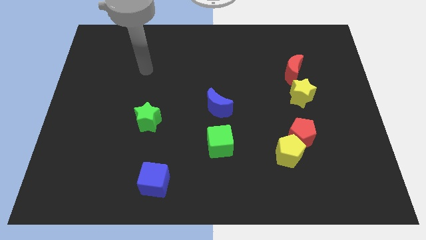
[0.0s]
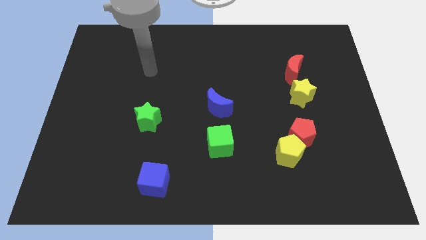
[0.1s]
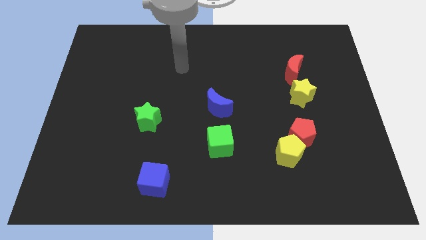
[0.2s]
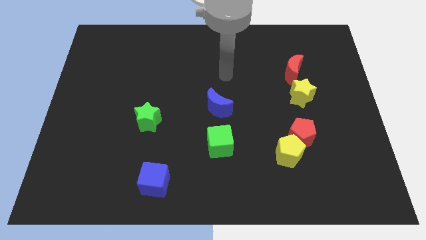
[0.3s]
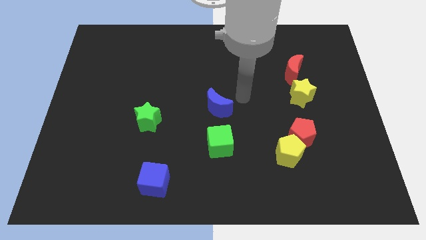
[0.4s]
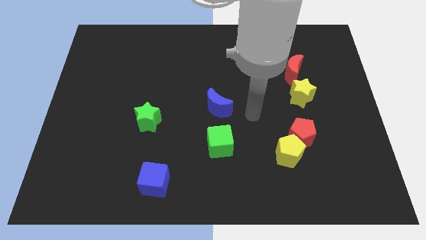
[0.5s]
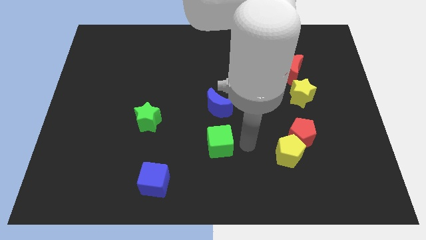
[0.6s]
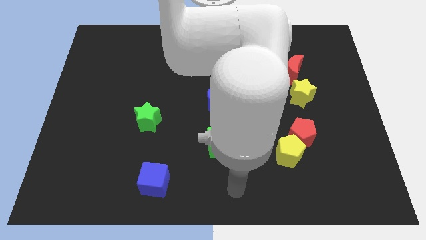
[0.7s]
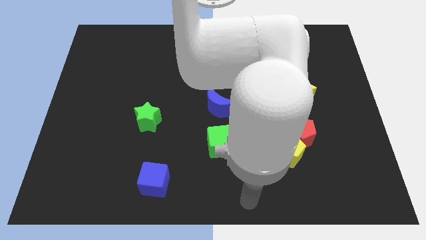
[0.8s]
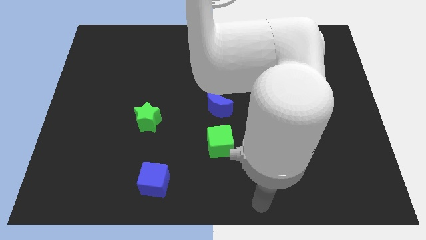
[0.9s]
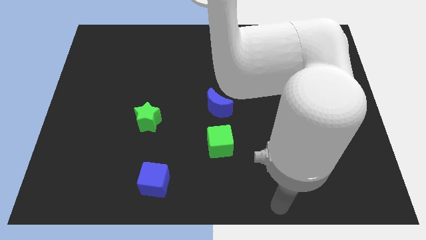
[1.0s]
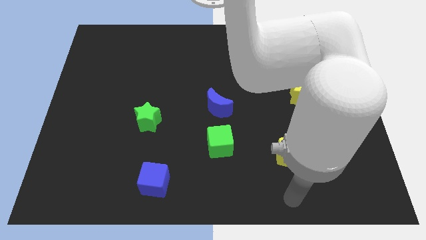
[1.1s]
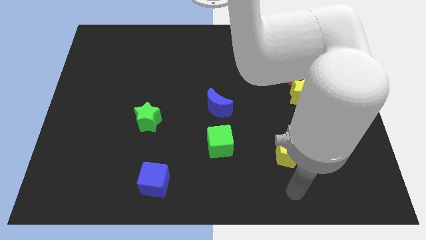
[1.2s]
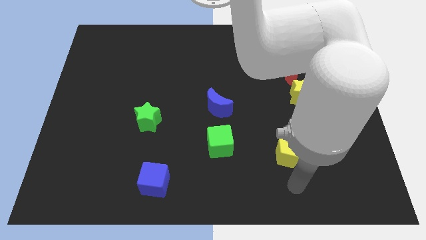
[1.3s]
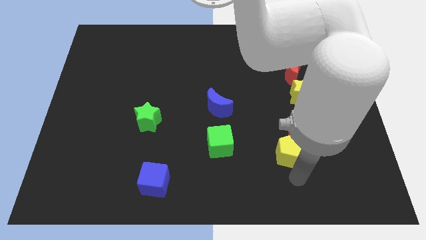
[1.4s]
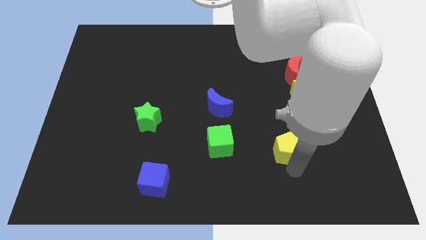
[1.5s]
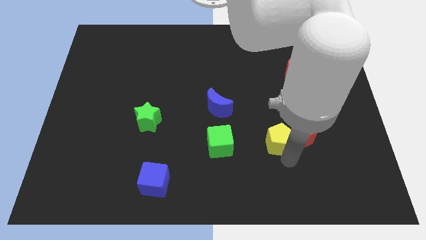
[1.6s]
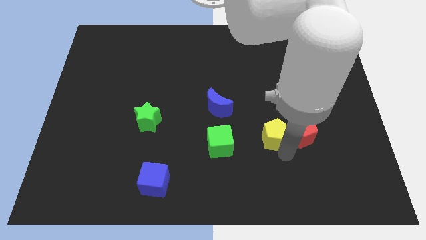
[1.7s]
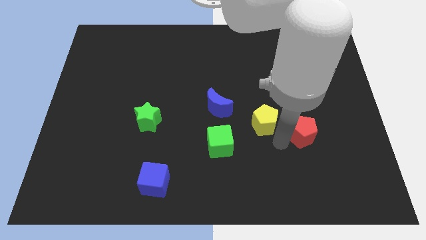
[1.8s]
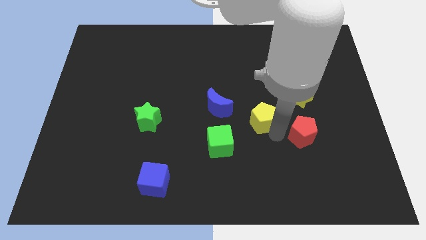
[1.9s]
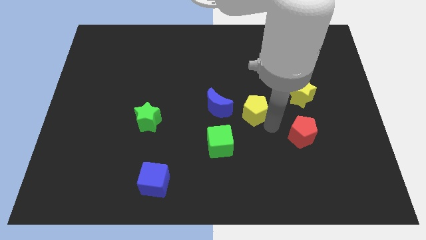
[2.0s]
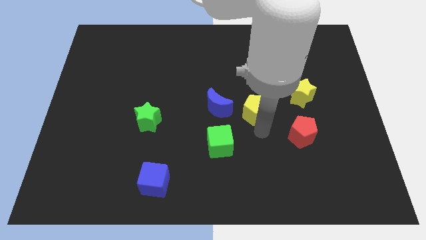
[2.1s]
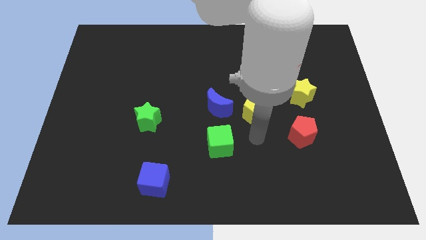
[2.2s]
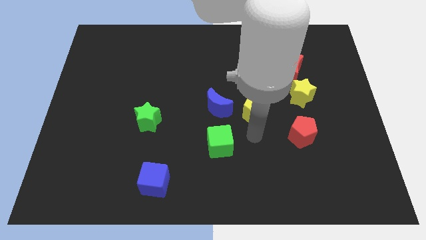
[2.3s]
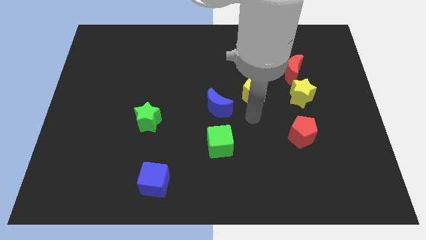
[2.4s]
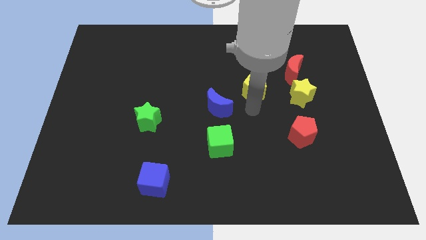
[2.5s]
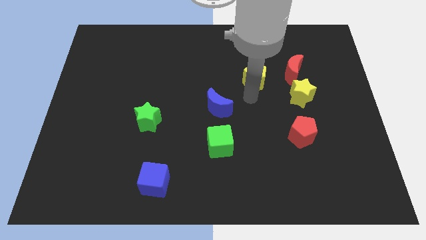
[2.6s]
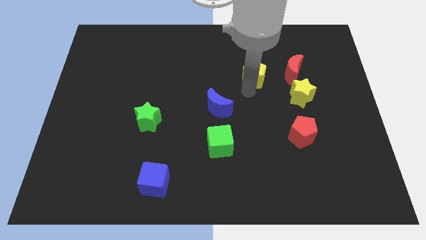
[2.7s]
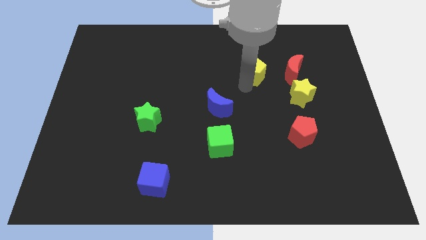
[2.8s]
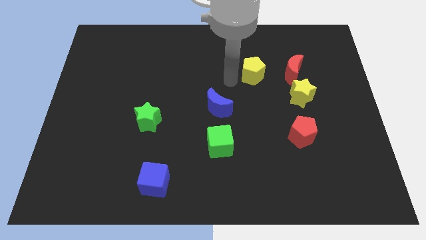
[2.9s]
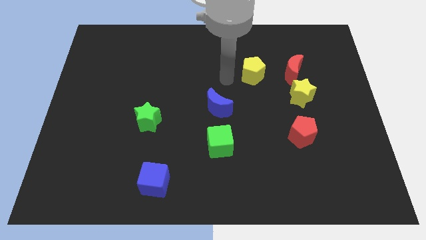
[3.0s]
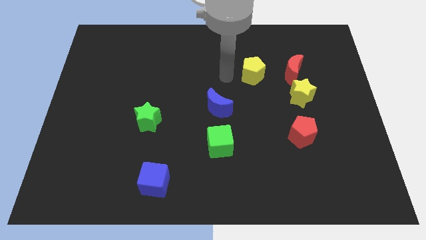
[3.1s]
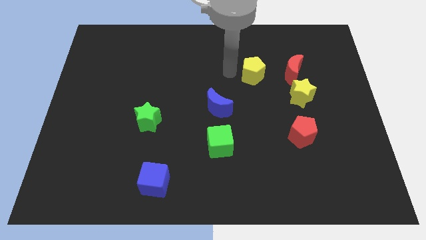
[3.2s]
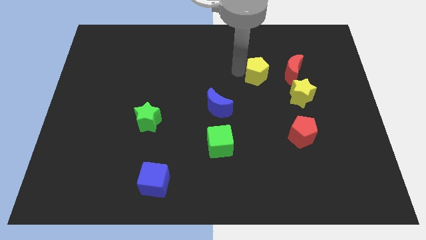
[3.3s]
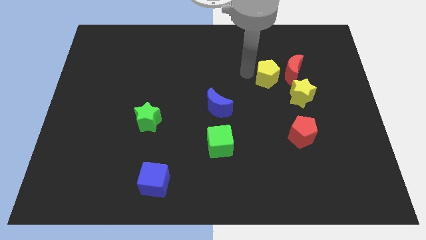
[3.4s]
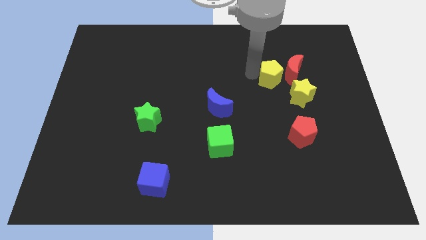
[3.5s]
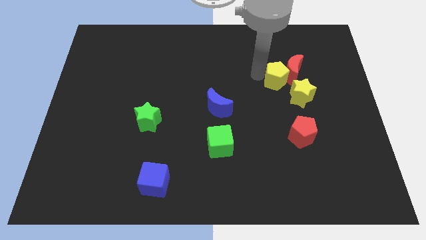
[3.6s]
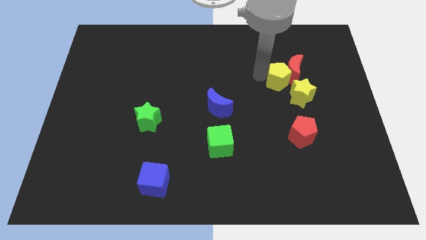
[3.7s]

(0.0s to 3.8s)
push the yellow pentagon next to the red moon

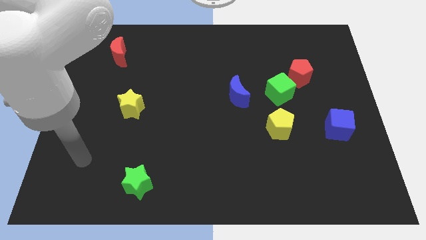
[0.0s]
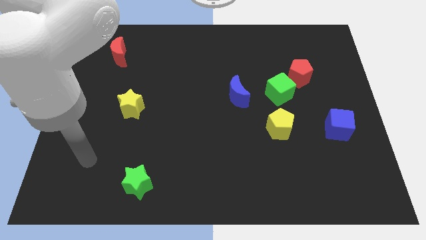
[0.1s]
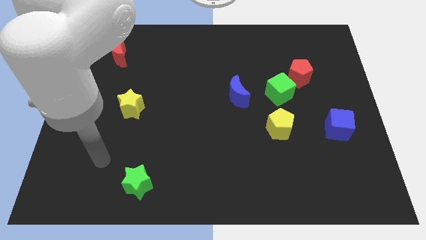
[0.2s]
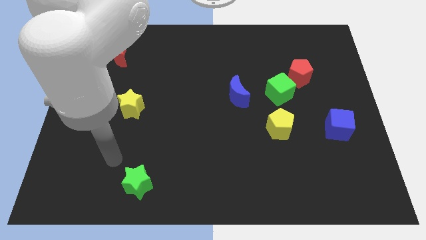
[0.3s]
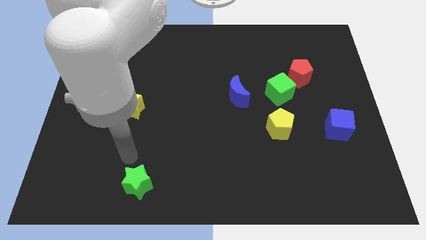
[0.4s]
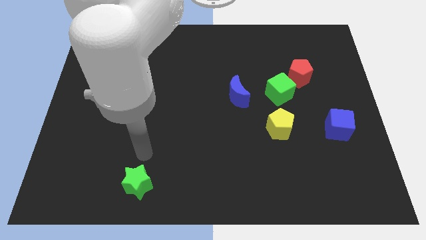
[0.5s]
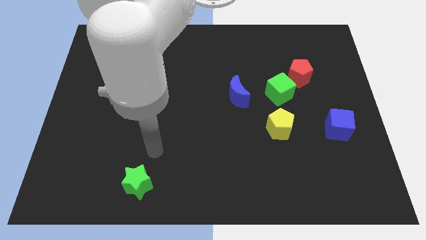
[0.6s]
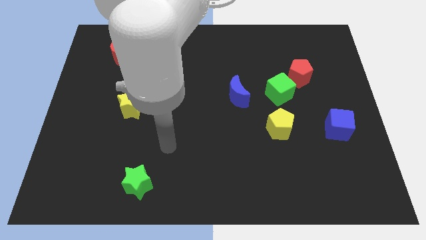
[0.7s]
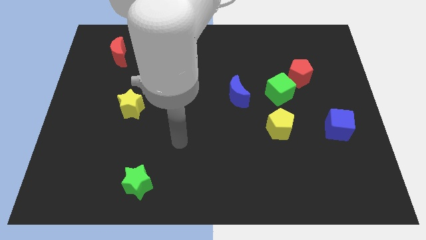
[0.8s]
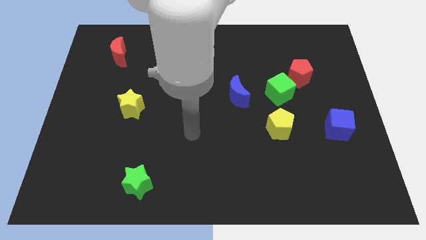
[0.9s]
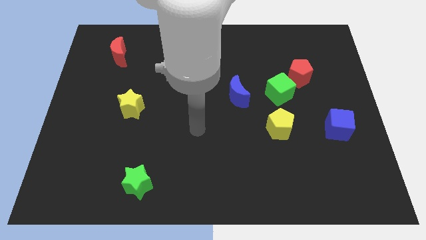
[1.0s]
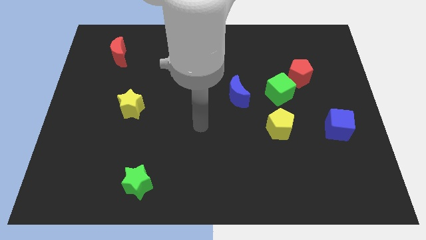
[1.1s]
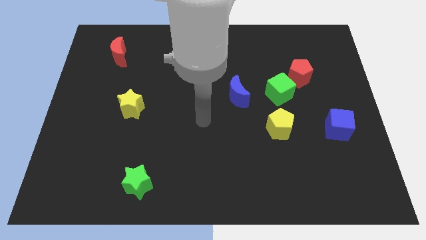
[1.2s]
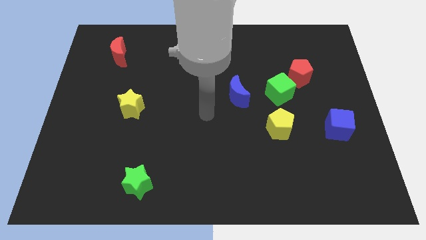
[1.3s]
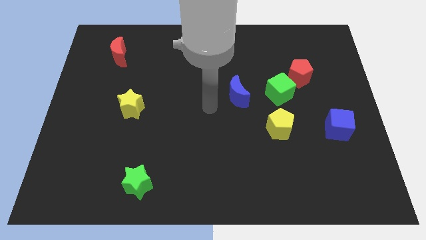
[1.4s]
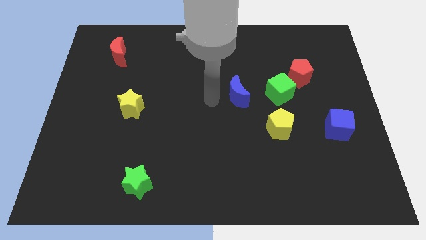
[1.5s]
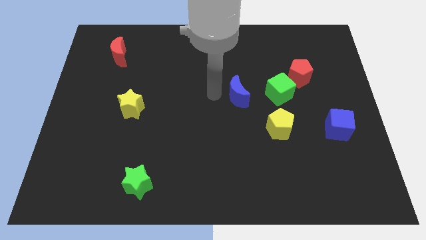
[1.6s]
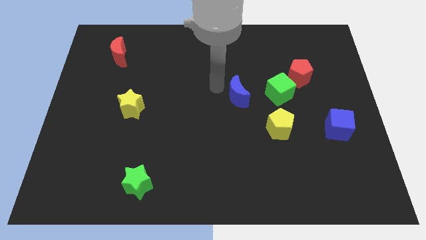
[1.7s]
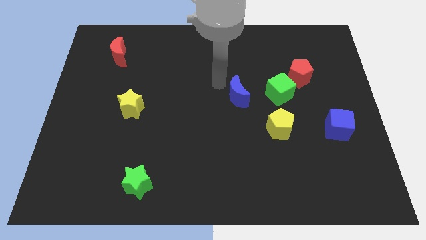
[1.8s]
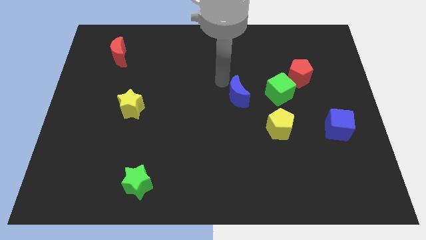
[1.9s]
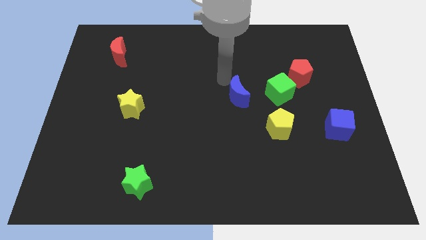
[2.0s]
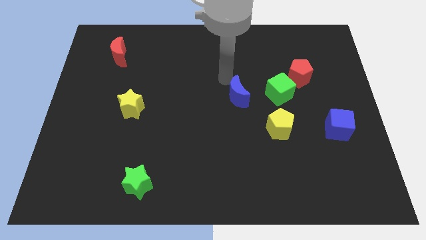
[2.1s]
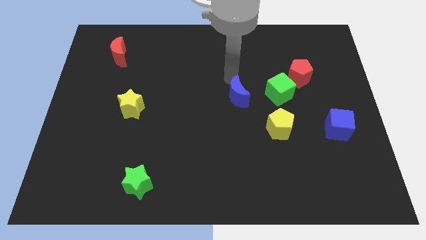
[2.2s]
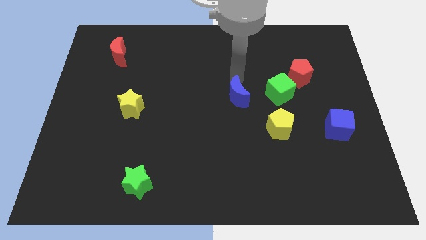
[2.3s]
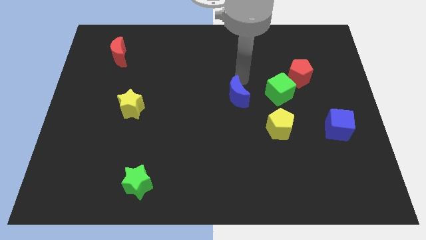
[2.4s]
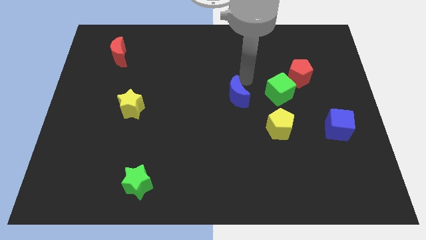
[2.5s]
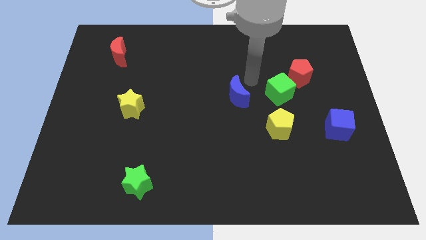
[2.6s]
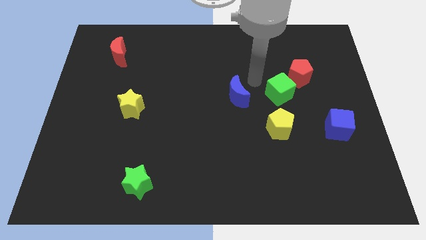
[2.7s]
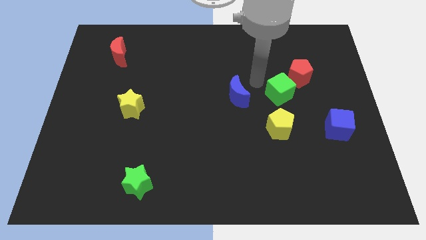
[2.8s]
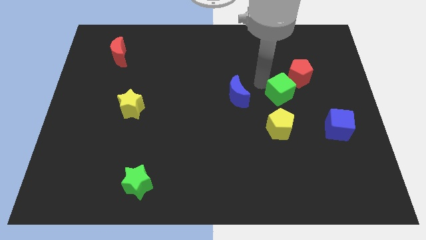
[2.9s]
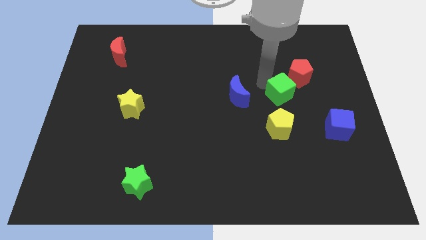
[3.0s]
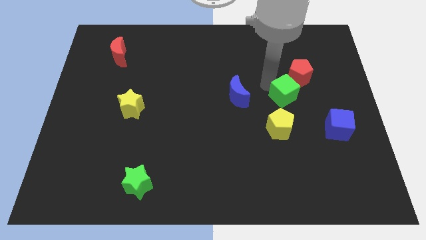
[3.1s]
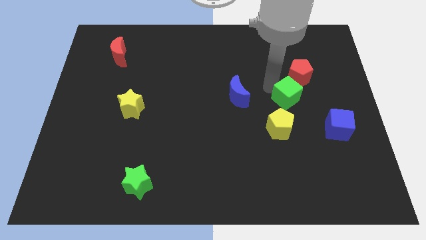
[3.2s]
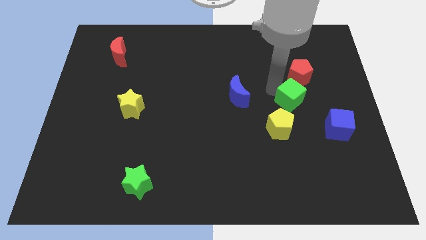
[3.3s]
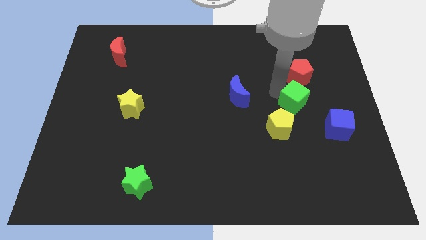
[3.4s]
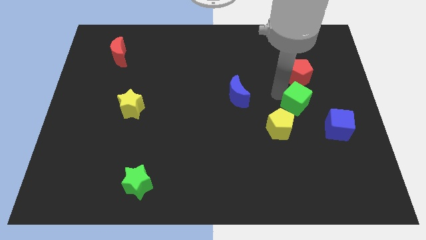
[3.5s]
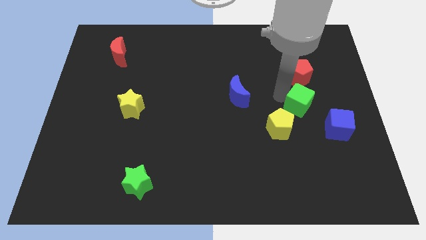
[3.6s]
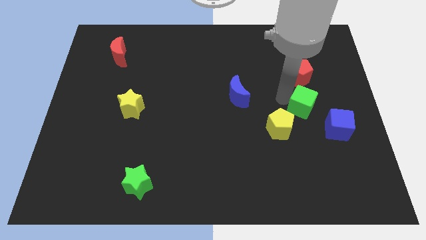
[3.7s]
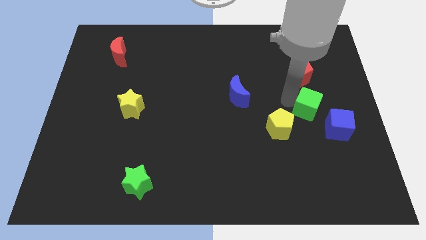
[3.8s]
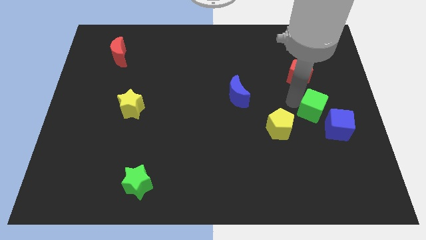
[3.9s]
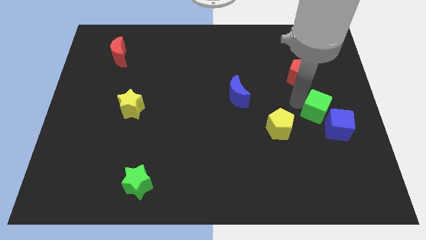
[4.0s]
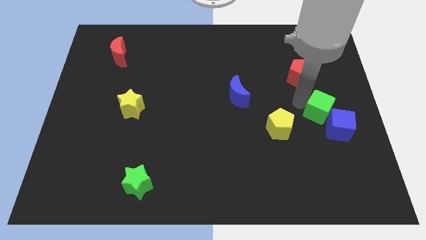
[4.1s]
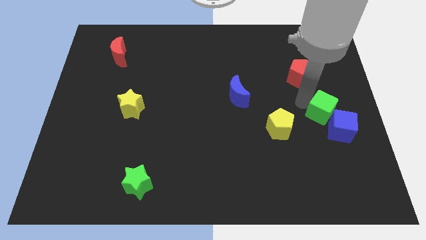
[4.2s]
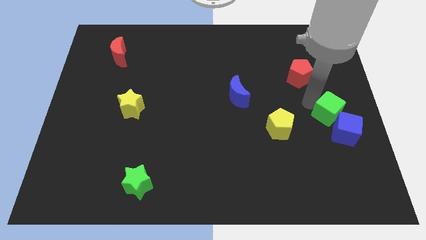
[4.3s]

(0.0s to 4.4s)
slide the green cube to the blue cube

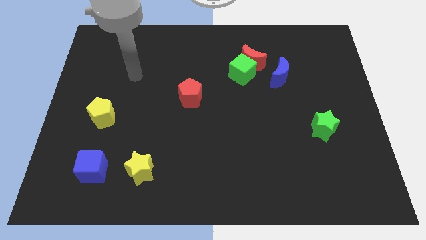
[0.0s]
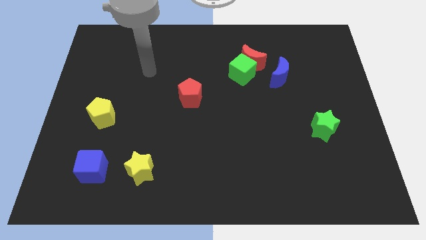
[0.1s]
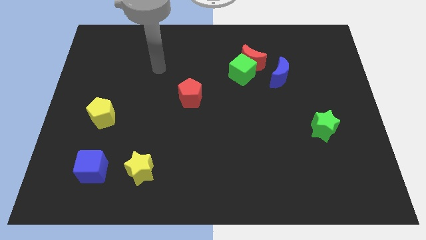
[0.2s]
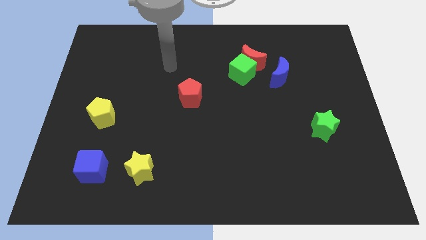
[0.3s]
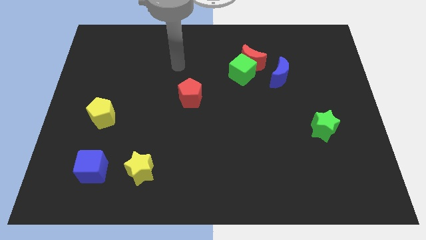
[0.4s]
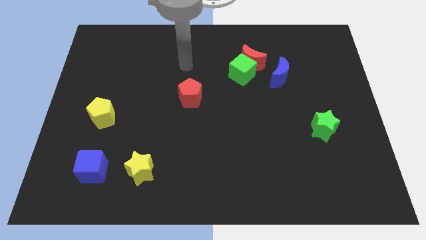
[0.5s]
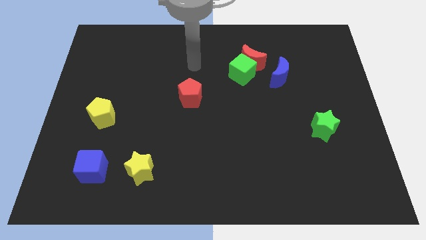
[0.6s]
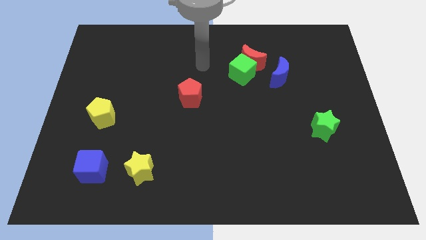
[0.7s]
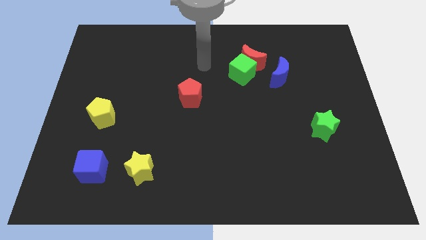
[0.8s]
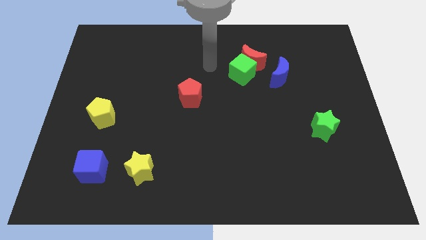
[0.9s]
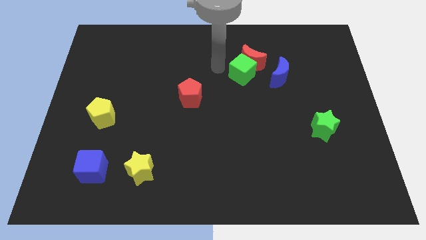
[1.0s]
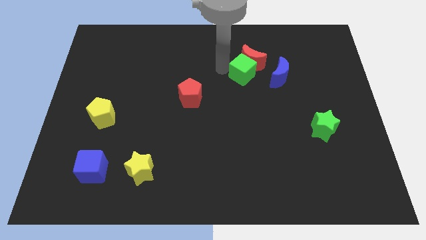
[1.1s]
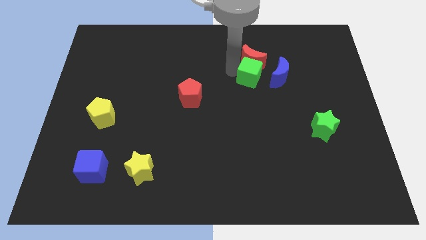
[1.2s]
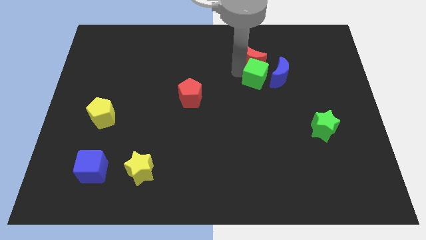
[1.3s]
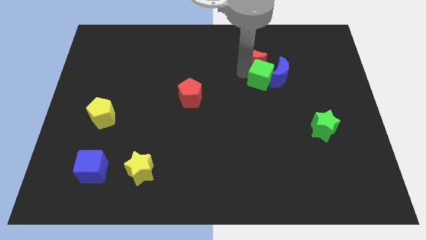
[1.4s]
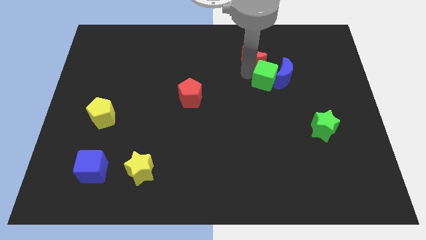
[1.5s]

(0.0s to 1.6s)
slide the green cube towards the blue moon
